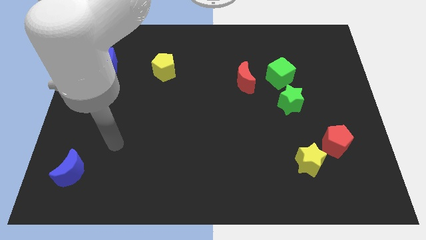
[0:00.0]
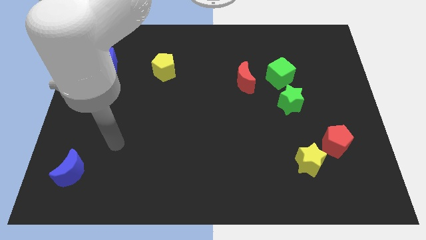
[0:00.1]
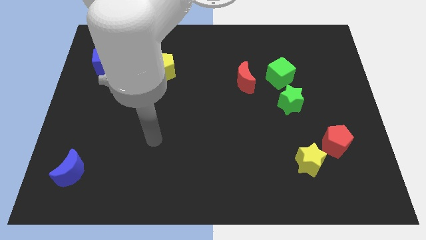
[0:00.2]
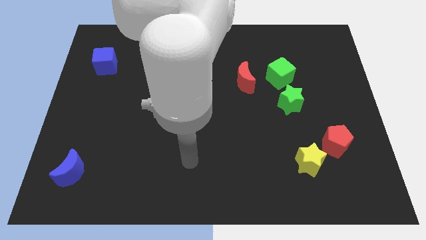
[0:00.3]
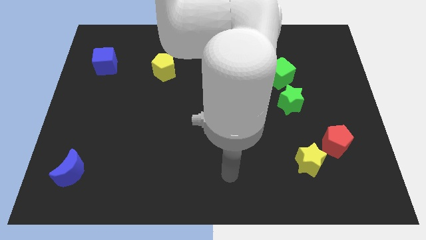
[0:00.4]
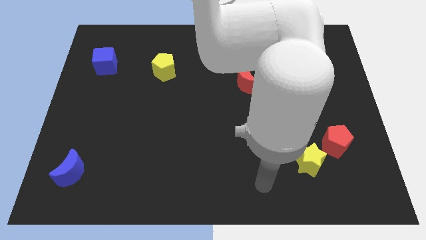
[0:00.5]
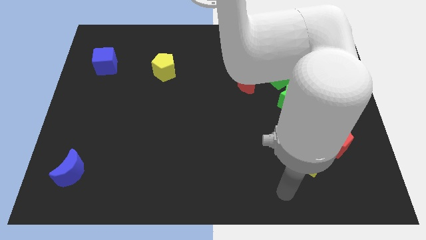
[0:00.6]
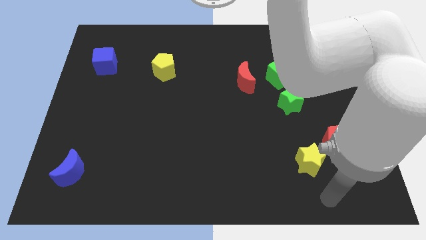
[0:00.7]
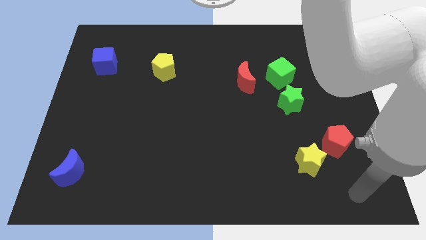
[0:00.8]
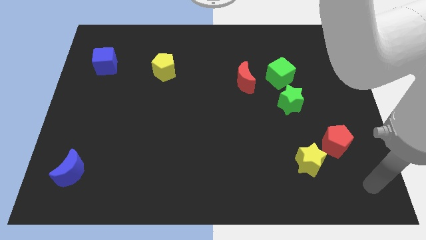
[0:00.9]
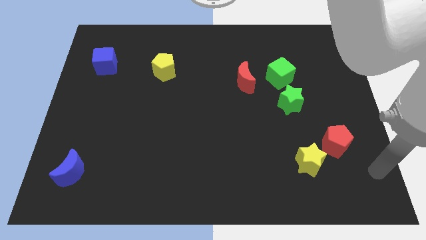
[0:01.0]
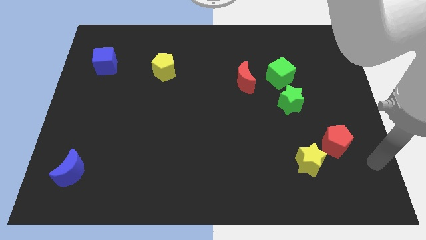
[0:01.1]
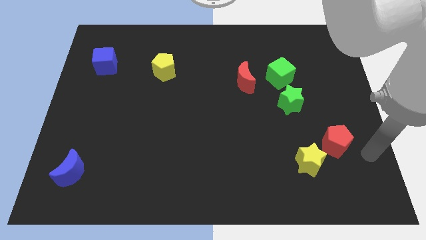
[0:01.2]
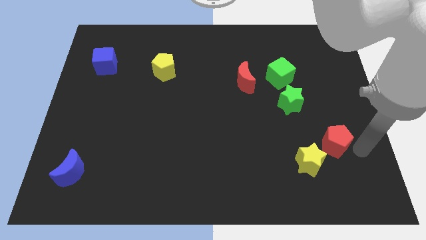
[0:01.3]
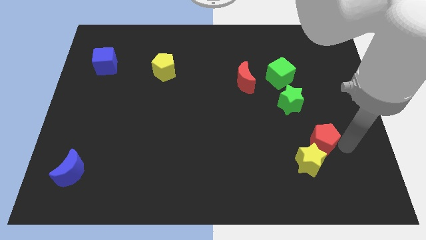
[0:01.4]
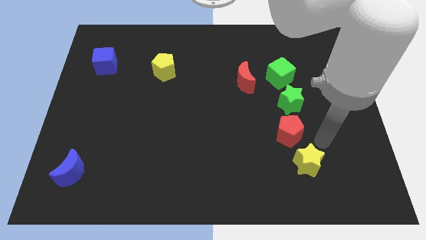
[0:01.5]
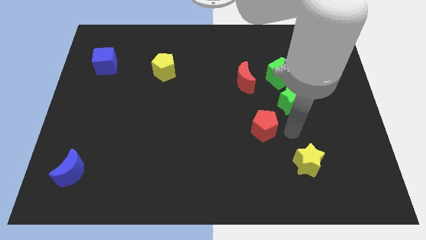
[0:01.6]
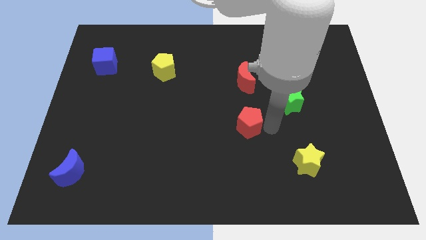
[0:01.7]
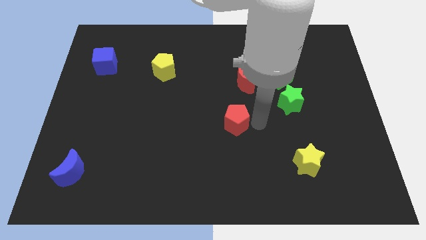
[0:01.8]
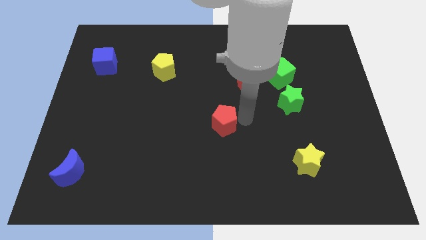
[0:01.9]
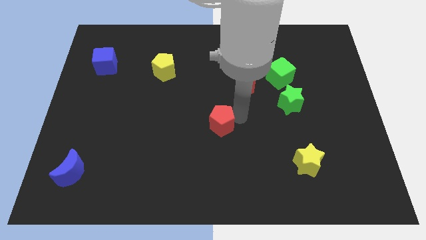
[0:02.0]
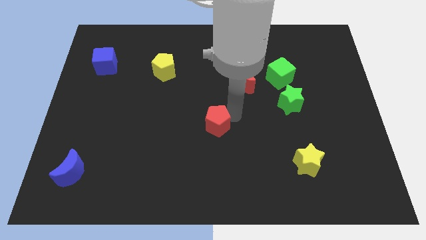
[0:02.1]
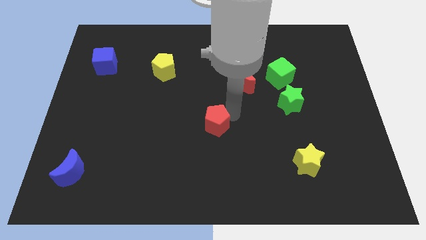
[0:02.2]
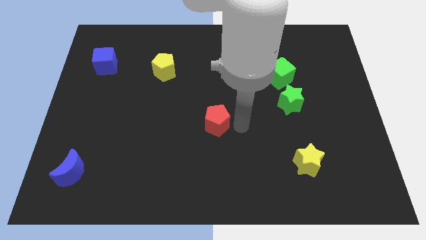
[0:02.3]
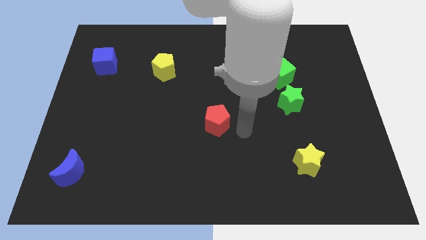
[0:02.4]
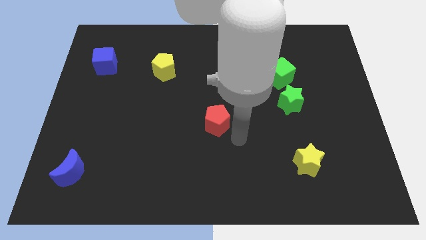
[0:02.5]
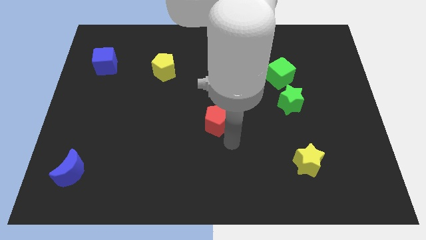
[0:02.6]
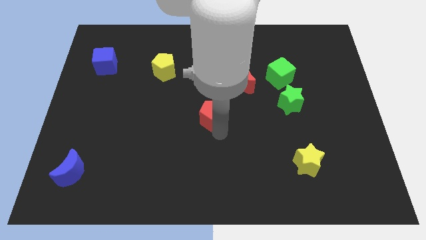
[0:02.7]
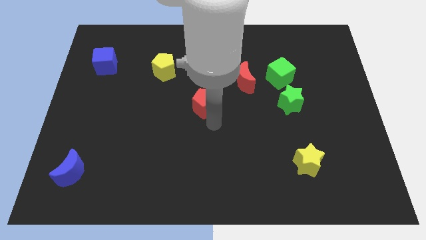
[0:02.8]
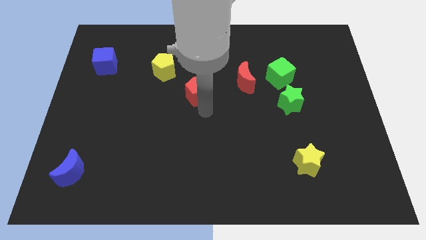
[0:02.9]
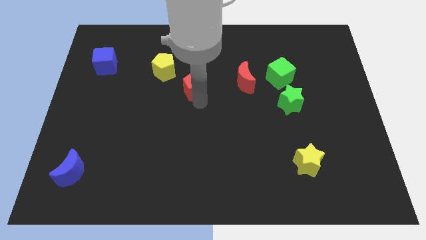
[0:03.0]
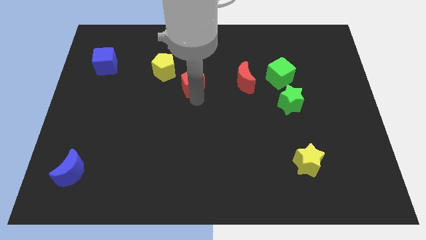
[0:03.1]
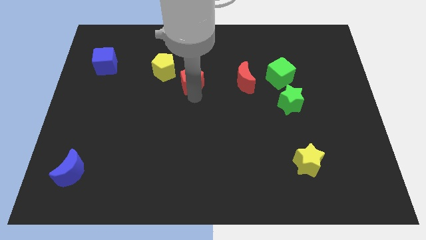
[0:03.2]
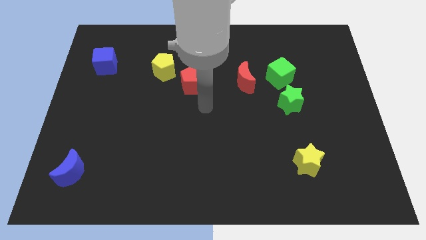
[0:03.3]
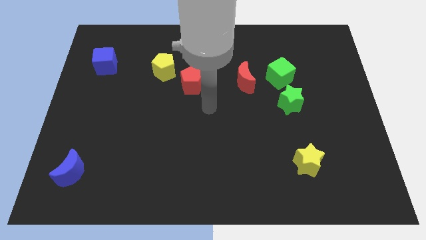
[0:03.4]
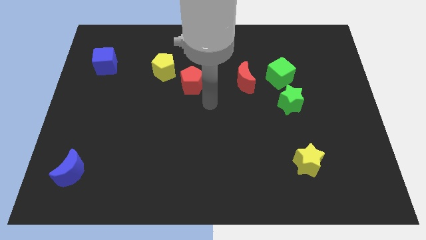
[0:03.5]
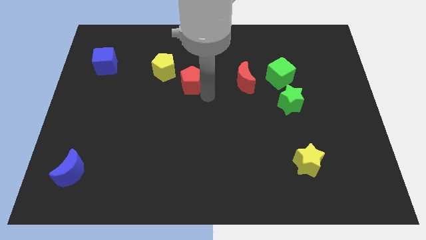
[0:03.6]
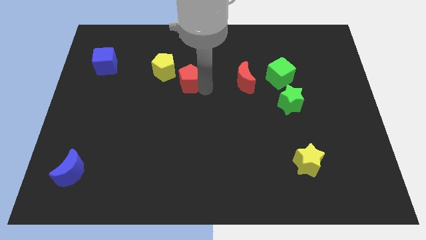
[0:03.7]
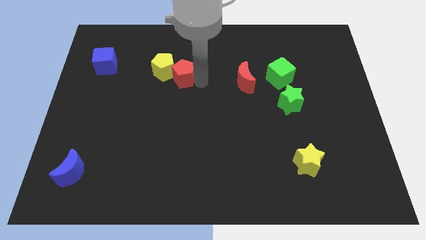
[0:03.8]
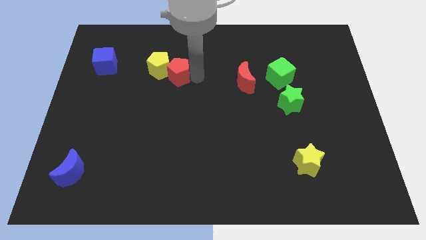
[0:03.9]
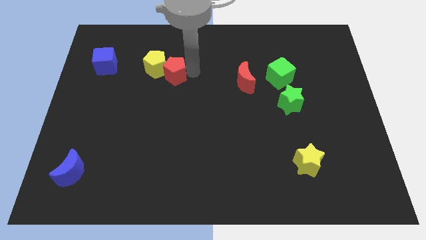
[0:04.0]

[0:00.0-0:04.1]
move the red pentagon next to the yellow pentagon

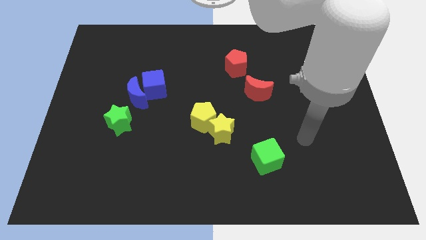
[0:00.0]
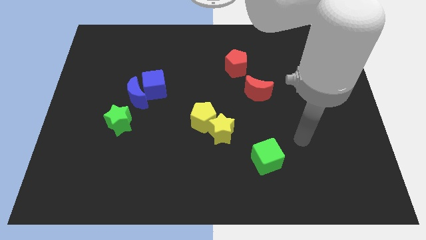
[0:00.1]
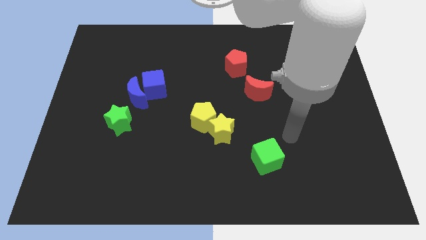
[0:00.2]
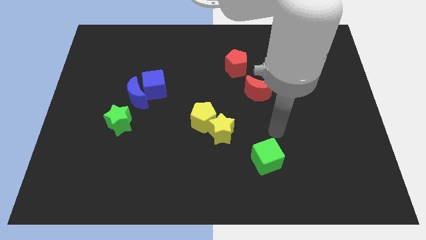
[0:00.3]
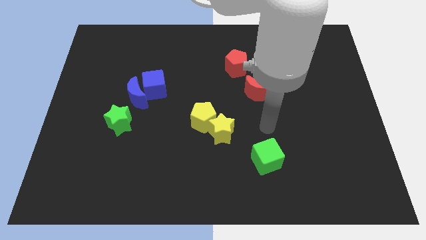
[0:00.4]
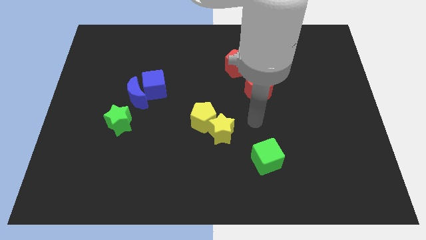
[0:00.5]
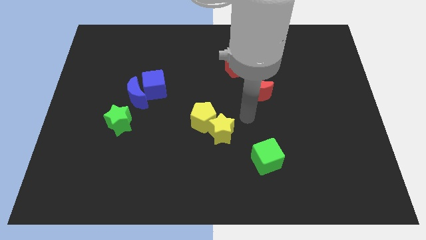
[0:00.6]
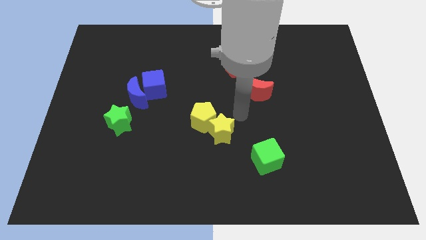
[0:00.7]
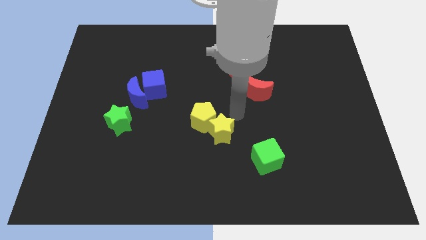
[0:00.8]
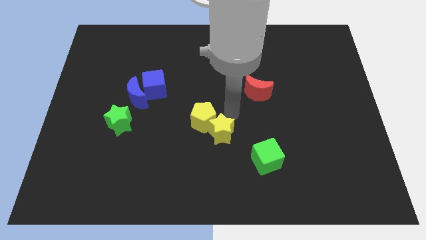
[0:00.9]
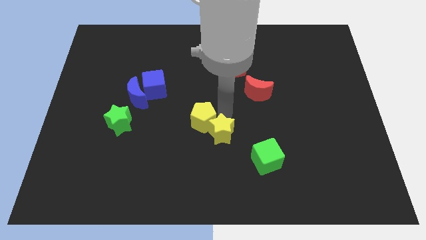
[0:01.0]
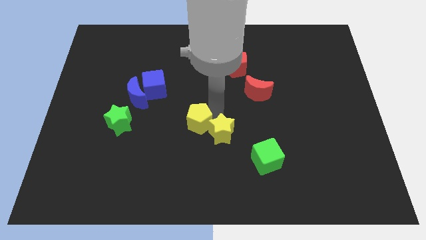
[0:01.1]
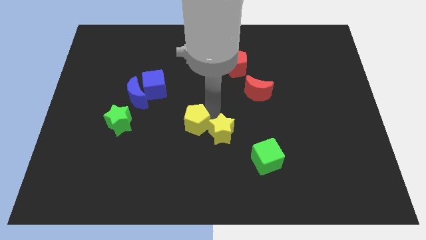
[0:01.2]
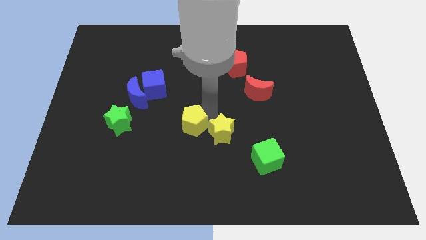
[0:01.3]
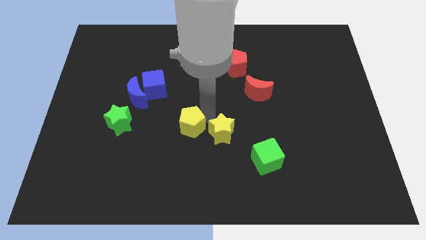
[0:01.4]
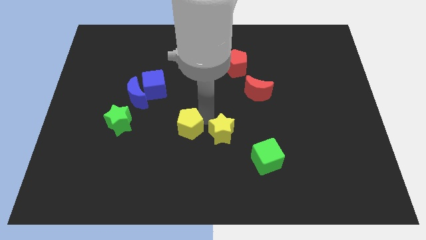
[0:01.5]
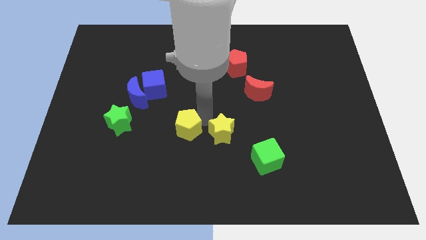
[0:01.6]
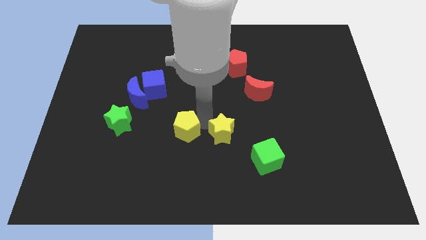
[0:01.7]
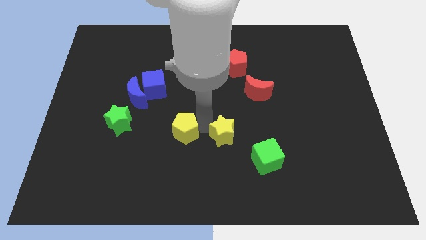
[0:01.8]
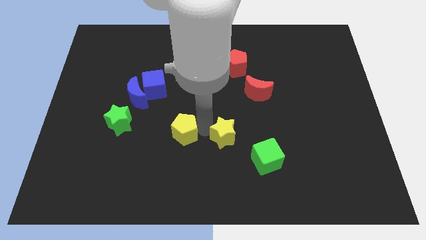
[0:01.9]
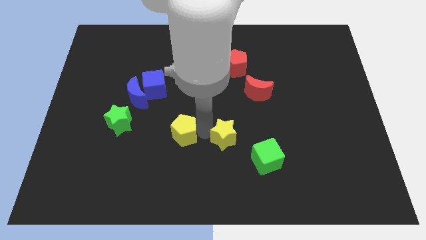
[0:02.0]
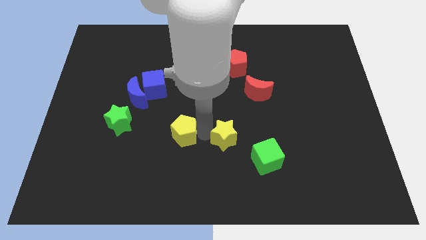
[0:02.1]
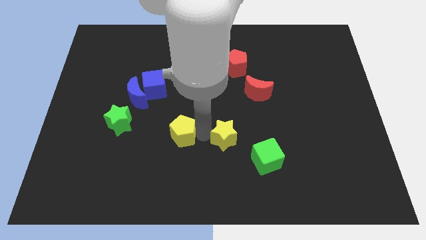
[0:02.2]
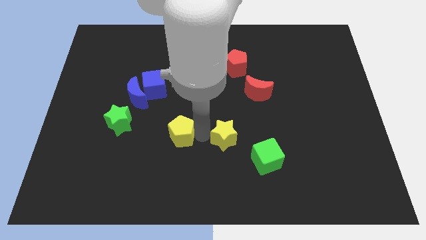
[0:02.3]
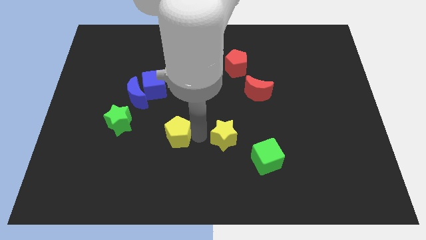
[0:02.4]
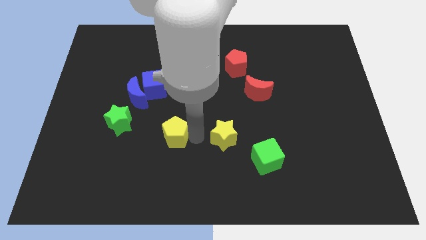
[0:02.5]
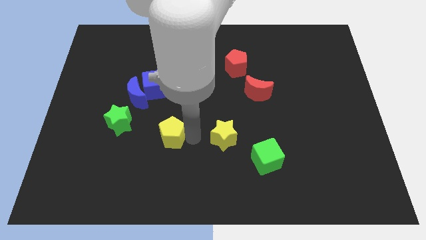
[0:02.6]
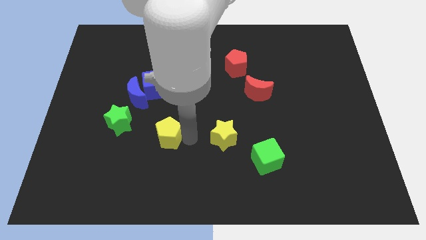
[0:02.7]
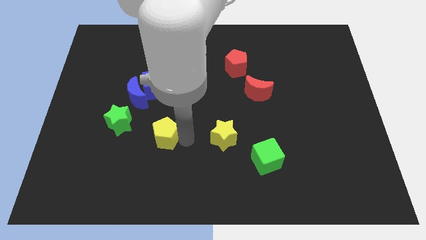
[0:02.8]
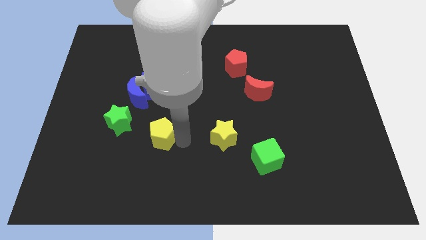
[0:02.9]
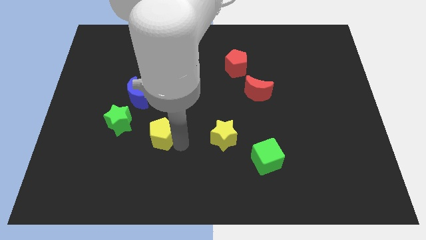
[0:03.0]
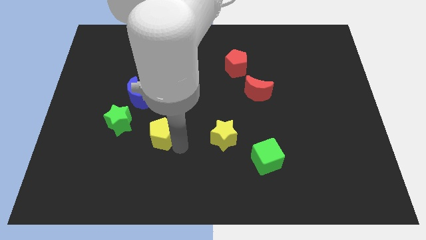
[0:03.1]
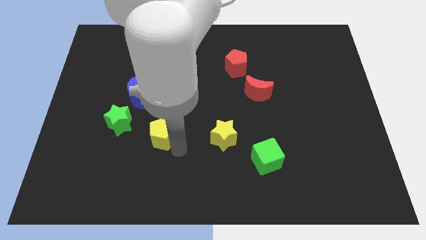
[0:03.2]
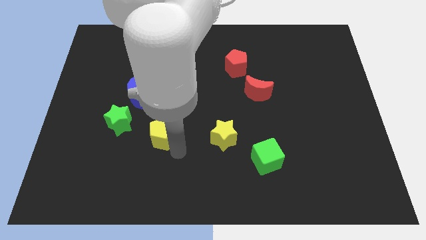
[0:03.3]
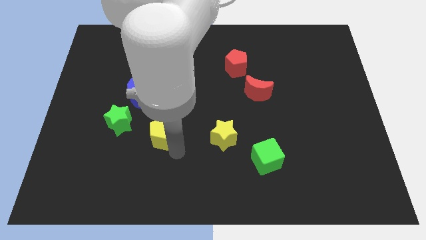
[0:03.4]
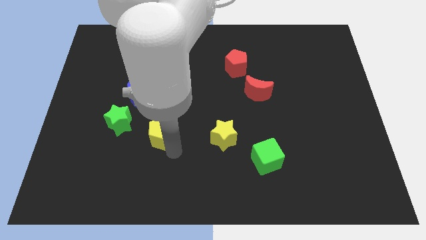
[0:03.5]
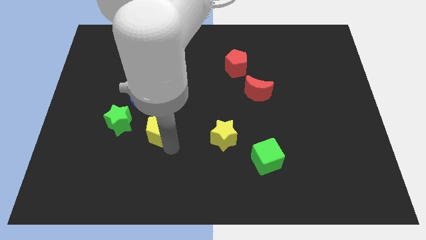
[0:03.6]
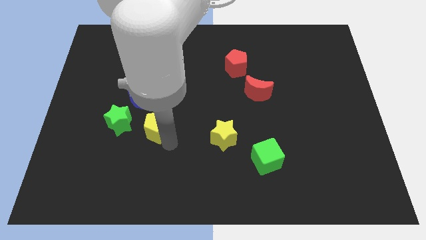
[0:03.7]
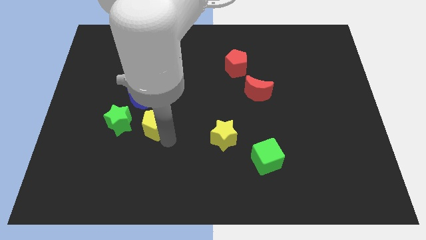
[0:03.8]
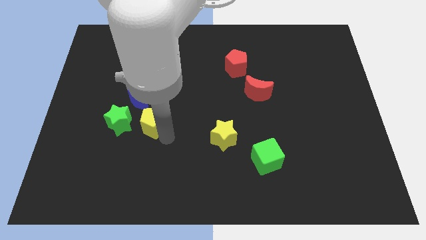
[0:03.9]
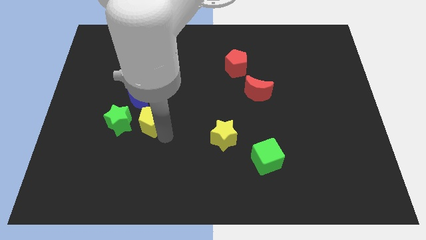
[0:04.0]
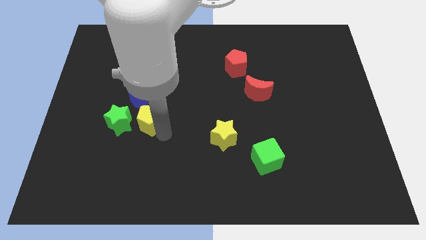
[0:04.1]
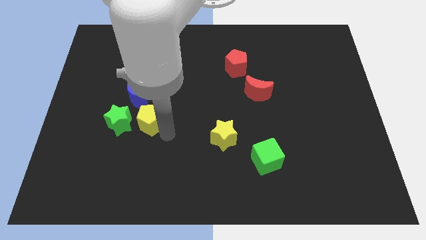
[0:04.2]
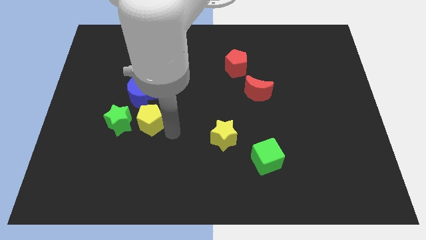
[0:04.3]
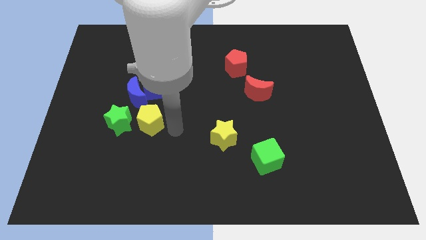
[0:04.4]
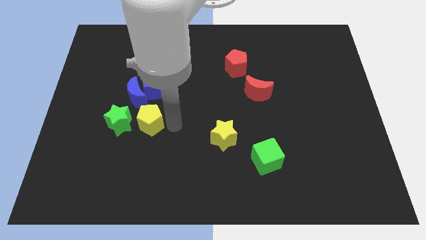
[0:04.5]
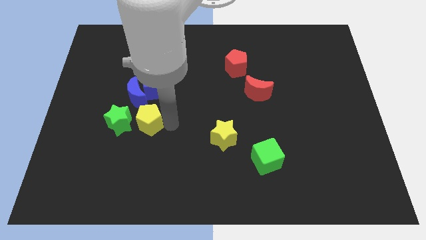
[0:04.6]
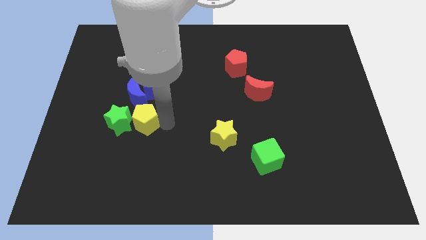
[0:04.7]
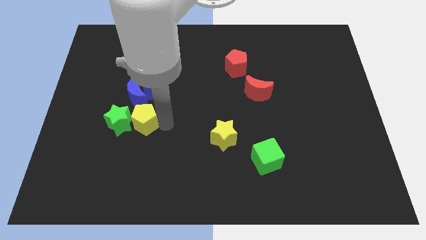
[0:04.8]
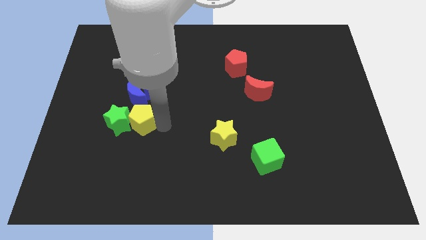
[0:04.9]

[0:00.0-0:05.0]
push the yellow pentagon close to the green star
